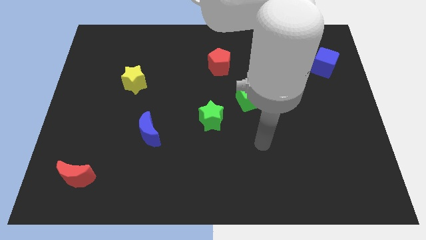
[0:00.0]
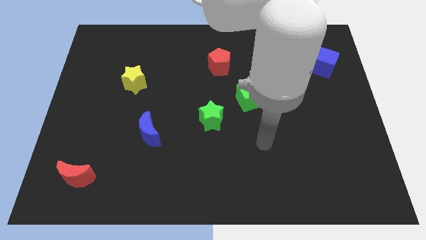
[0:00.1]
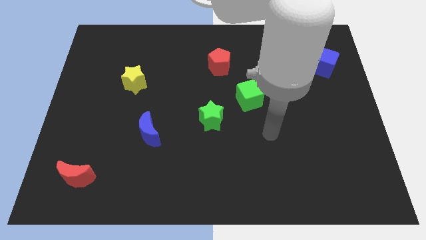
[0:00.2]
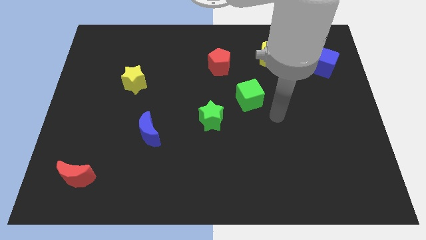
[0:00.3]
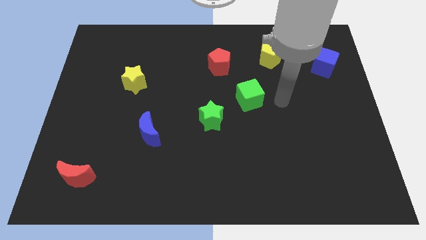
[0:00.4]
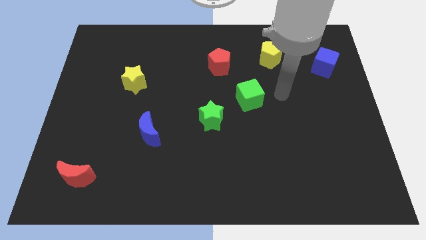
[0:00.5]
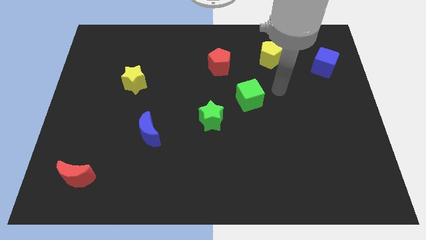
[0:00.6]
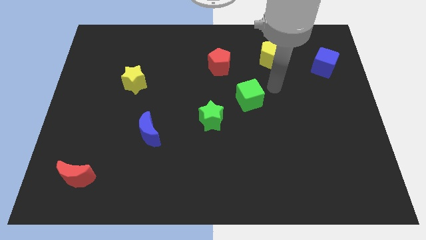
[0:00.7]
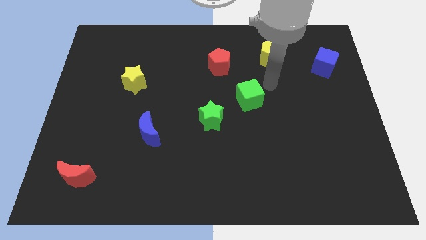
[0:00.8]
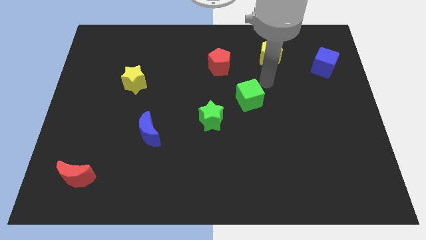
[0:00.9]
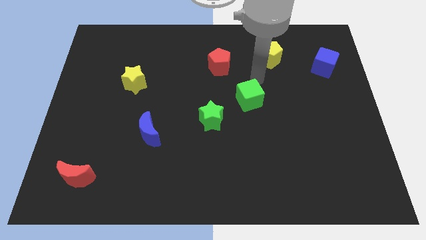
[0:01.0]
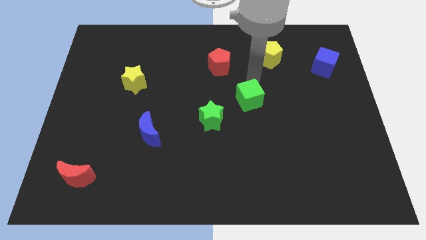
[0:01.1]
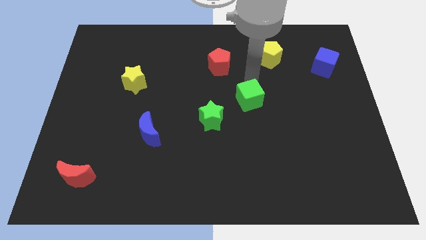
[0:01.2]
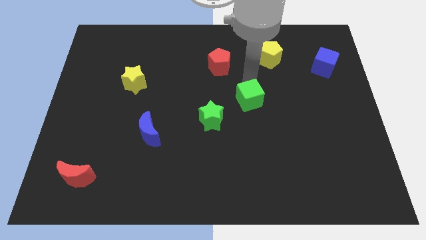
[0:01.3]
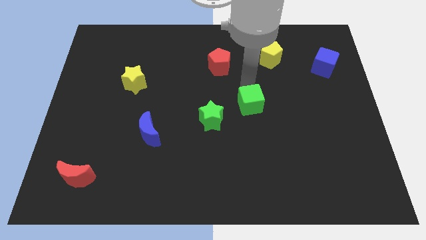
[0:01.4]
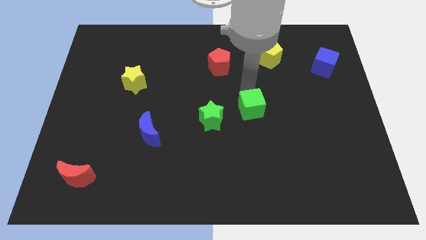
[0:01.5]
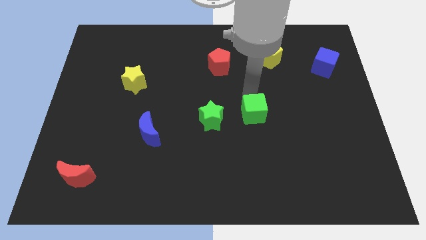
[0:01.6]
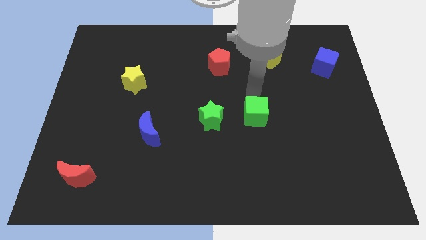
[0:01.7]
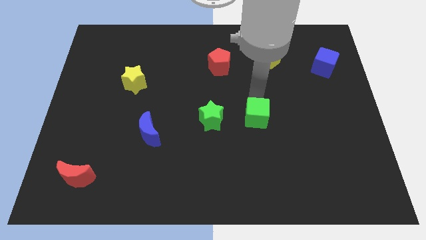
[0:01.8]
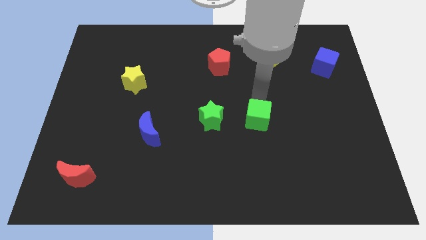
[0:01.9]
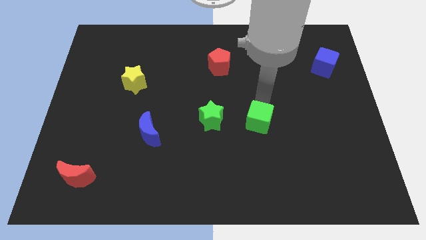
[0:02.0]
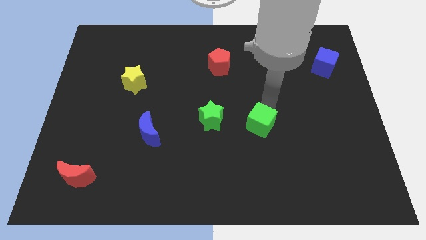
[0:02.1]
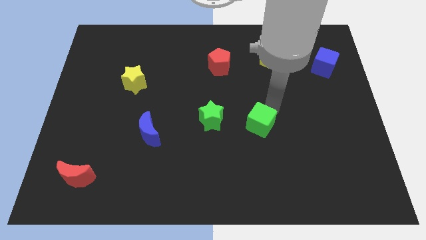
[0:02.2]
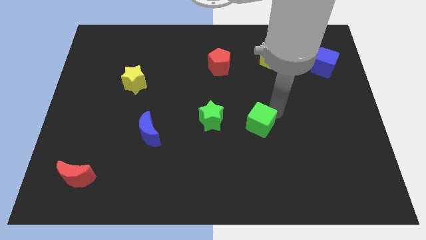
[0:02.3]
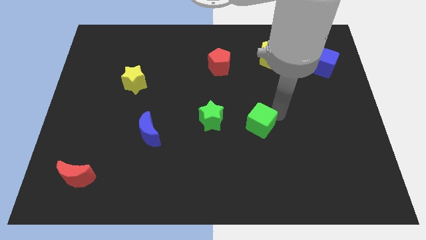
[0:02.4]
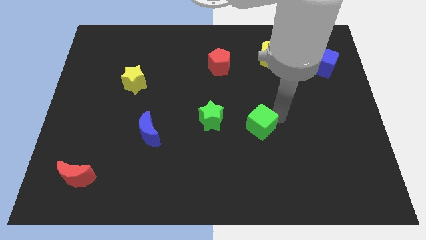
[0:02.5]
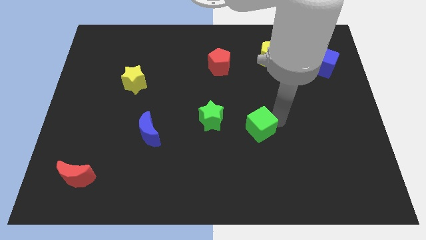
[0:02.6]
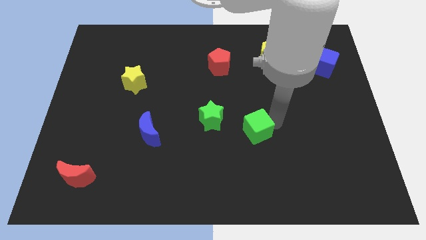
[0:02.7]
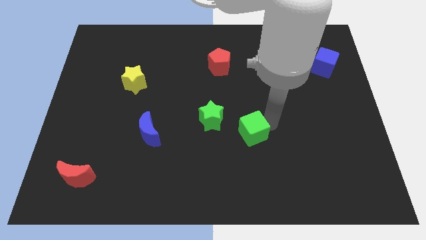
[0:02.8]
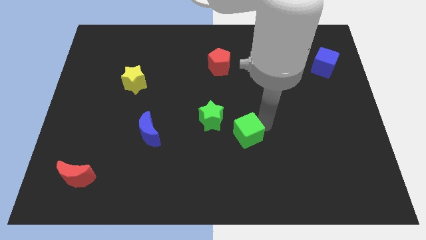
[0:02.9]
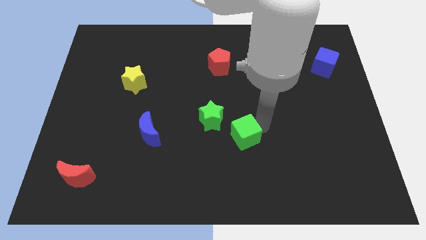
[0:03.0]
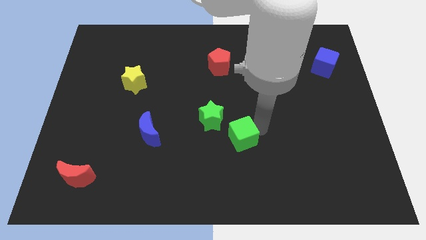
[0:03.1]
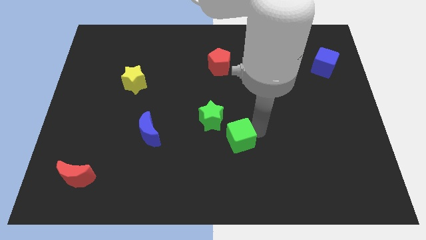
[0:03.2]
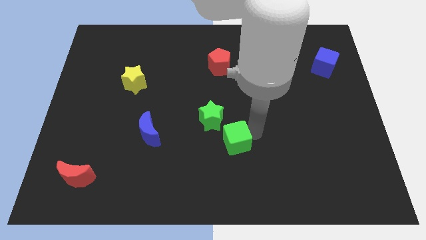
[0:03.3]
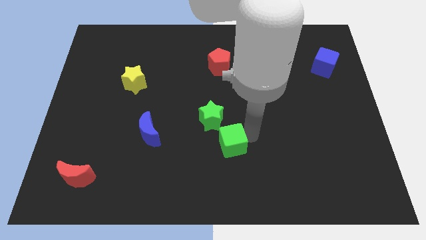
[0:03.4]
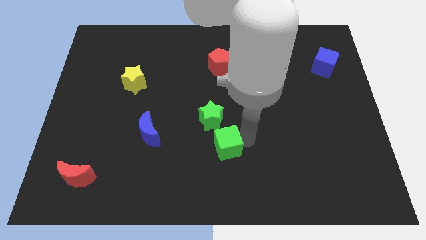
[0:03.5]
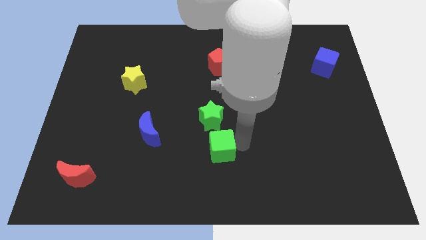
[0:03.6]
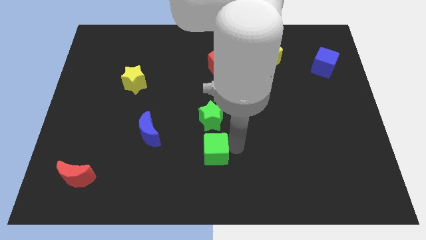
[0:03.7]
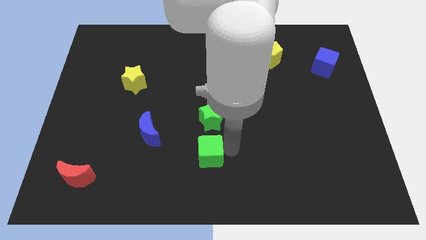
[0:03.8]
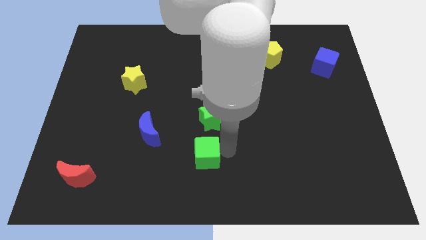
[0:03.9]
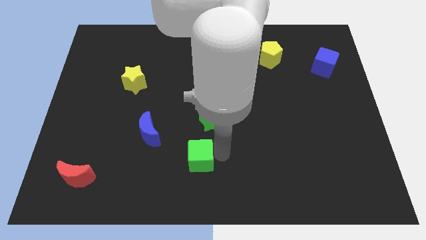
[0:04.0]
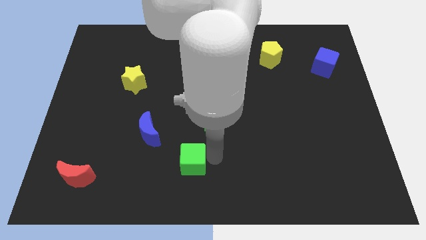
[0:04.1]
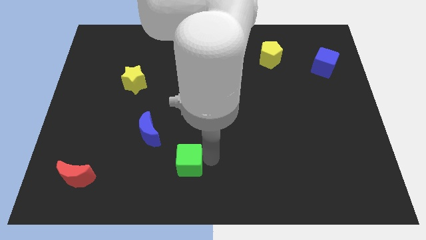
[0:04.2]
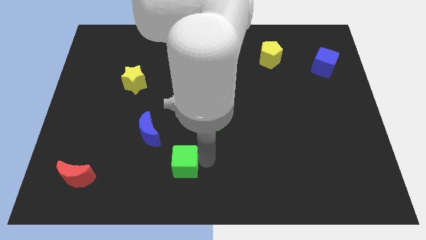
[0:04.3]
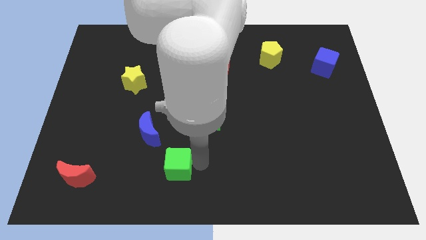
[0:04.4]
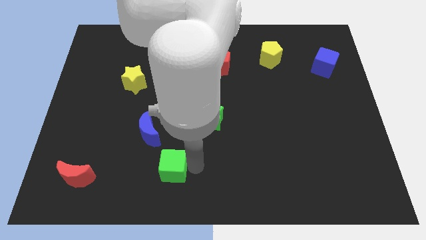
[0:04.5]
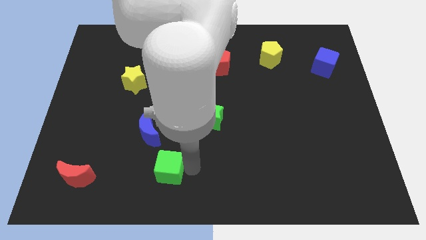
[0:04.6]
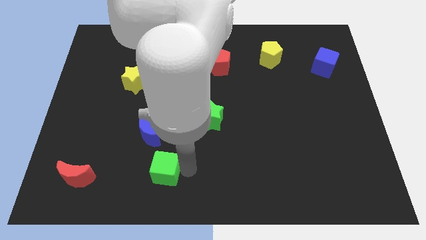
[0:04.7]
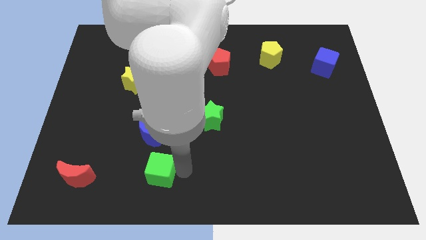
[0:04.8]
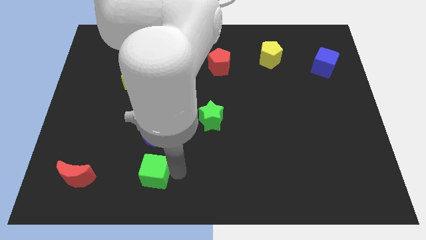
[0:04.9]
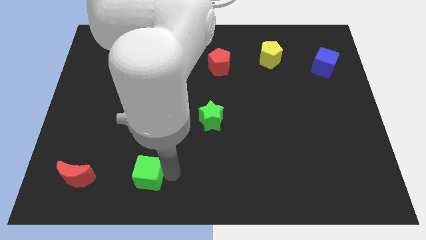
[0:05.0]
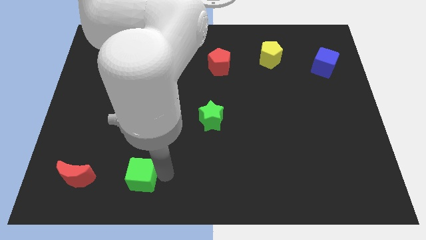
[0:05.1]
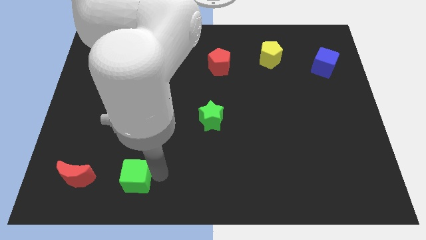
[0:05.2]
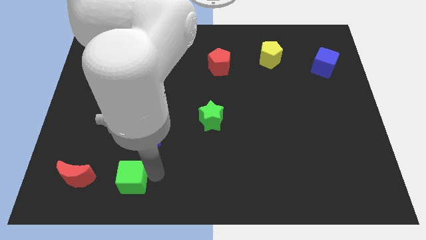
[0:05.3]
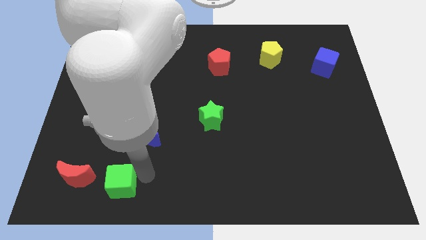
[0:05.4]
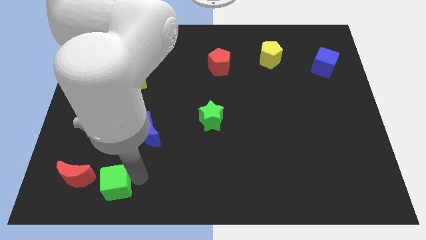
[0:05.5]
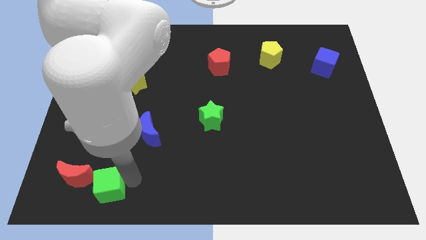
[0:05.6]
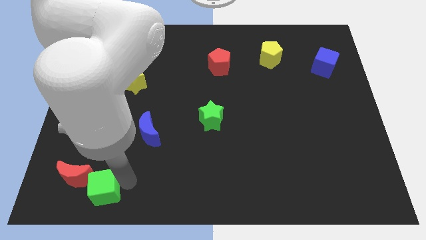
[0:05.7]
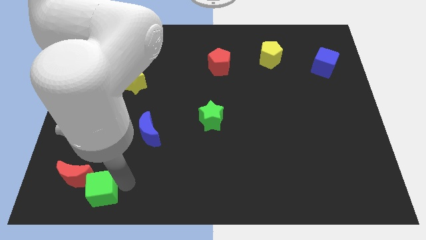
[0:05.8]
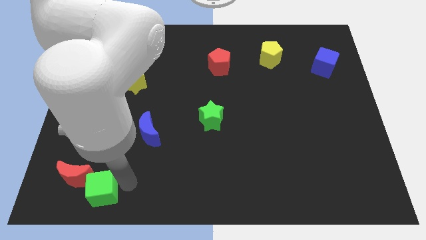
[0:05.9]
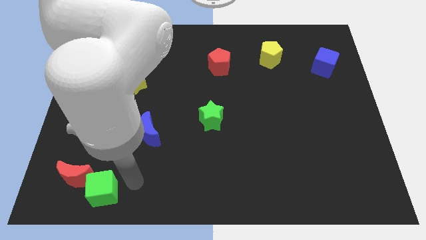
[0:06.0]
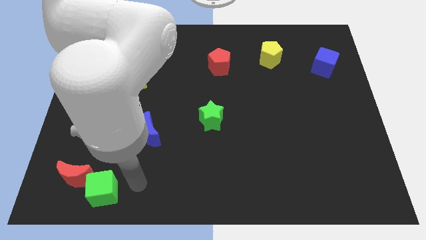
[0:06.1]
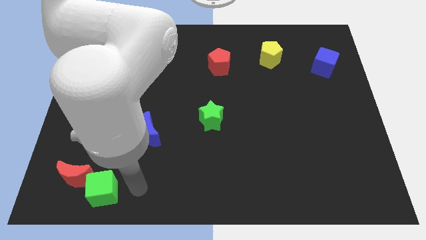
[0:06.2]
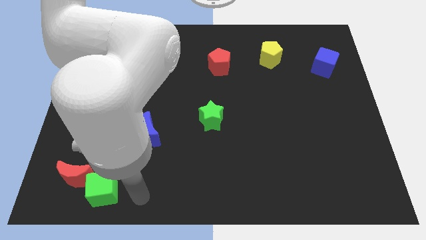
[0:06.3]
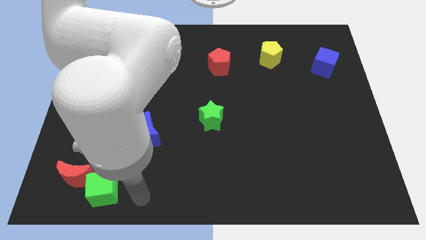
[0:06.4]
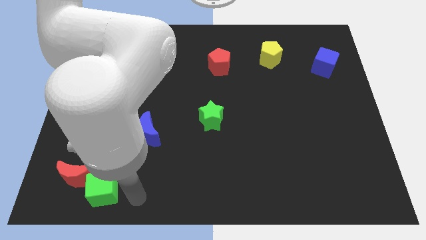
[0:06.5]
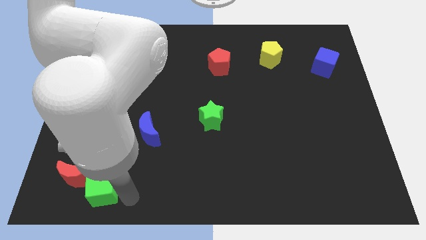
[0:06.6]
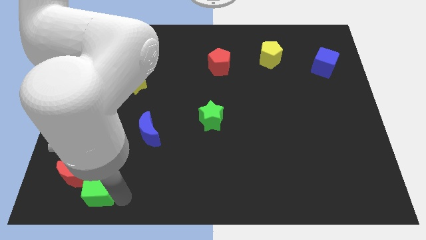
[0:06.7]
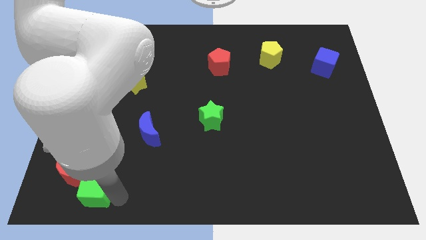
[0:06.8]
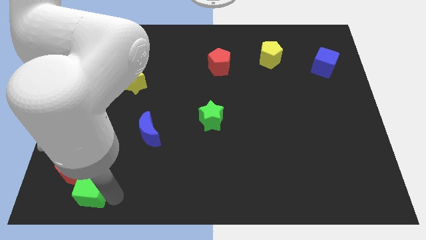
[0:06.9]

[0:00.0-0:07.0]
push the green cube close to the red moon

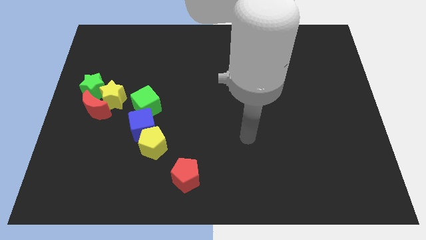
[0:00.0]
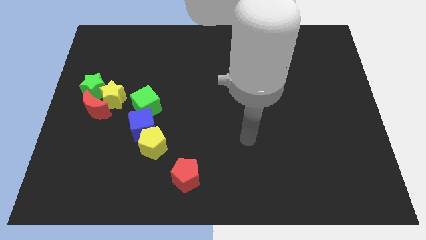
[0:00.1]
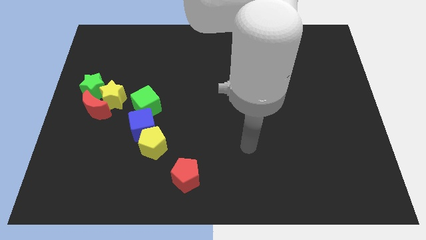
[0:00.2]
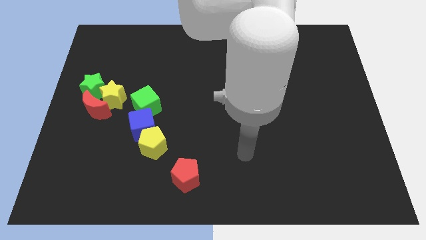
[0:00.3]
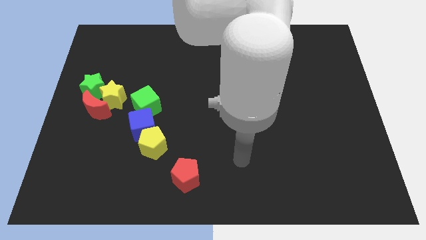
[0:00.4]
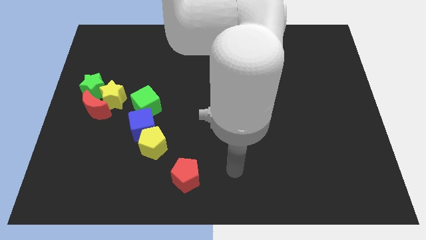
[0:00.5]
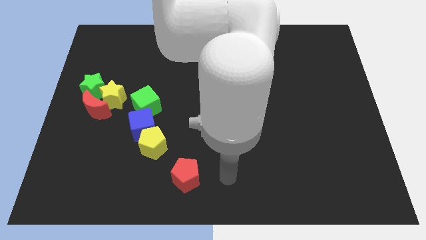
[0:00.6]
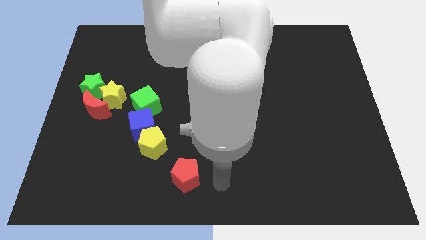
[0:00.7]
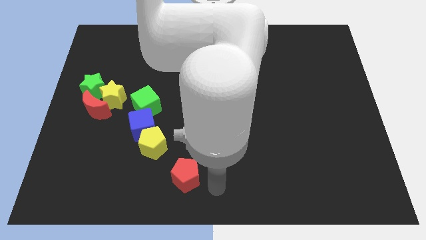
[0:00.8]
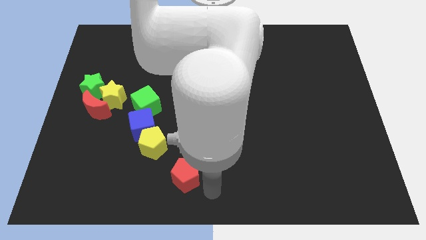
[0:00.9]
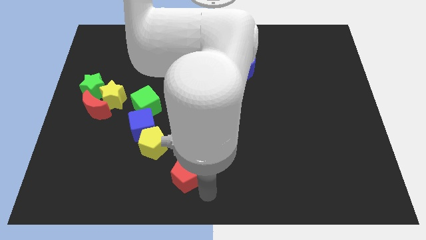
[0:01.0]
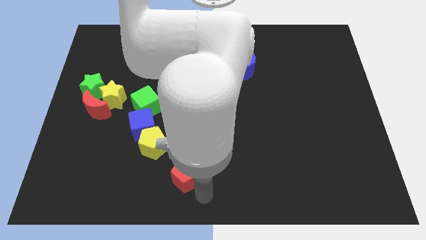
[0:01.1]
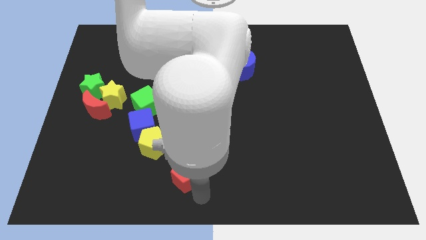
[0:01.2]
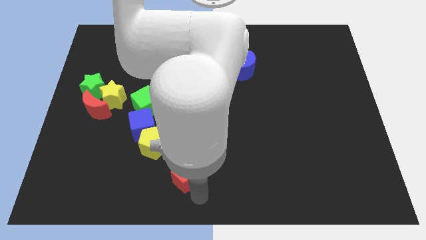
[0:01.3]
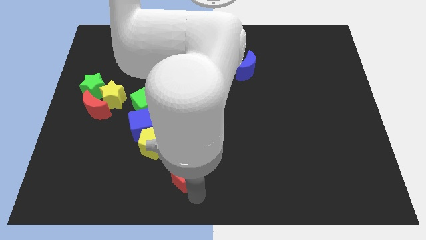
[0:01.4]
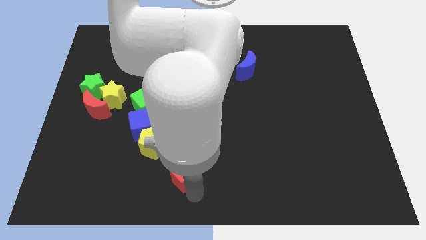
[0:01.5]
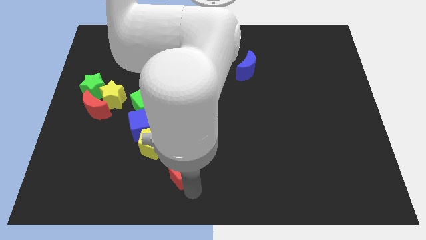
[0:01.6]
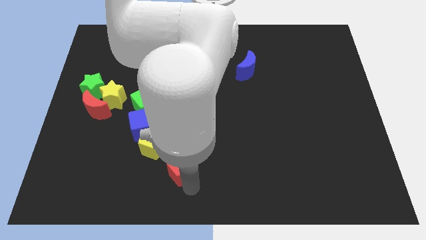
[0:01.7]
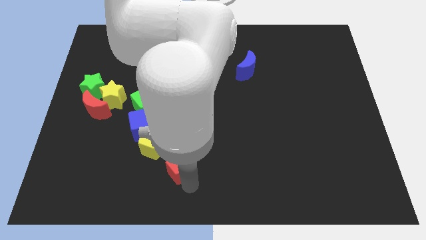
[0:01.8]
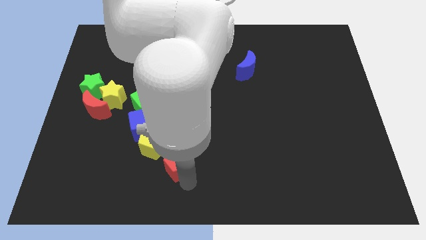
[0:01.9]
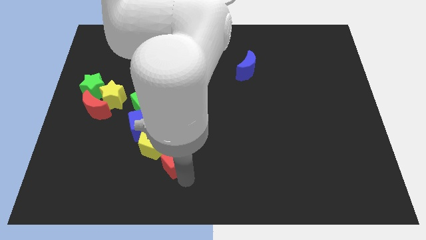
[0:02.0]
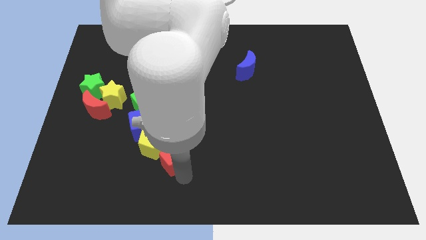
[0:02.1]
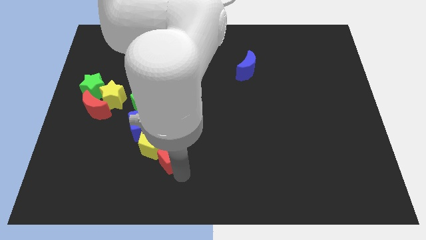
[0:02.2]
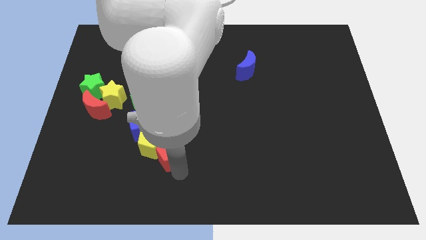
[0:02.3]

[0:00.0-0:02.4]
move the red pentagon to the yellow pentagon
